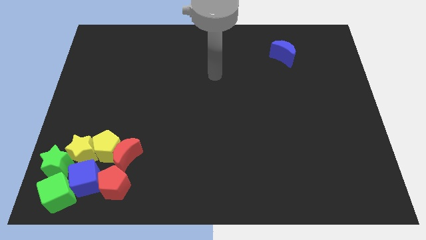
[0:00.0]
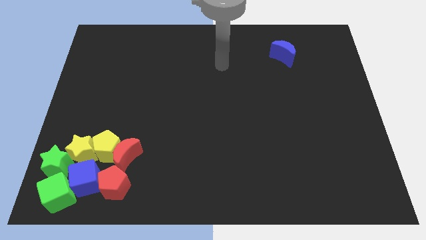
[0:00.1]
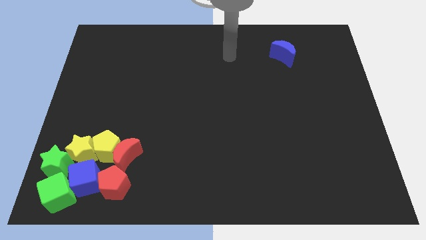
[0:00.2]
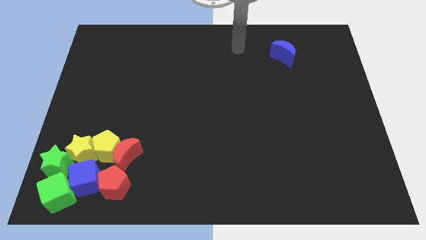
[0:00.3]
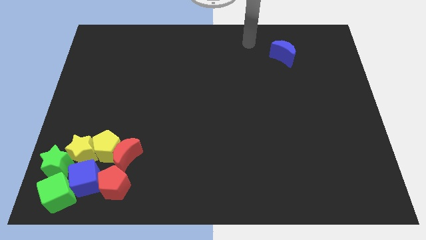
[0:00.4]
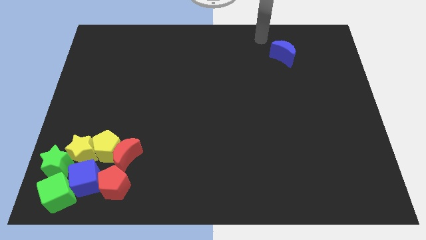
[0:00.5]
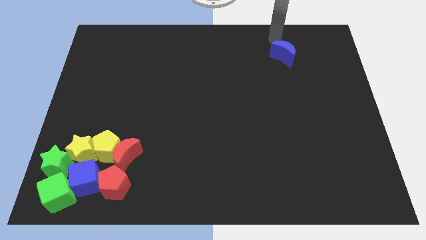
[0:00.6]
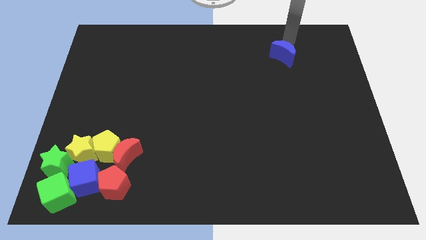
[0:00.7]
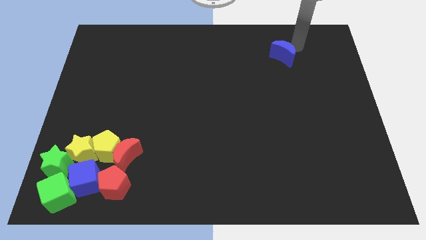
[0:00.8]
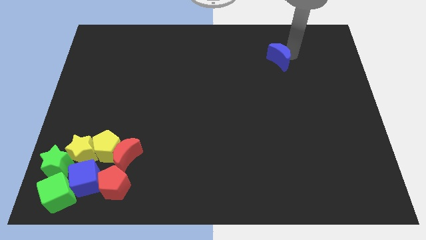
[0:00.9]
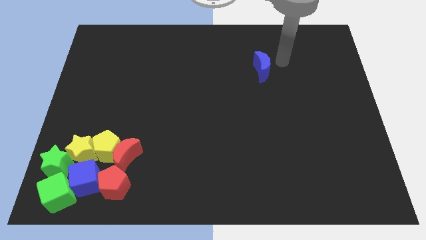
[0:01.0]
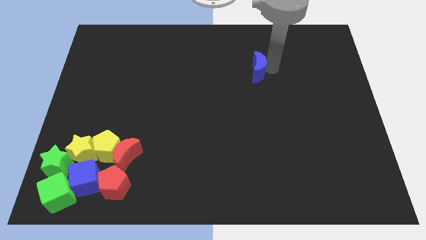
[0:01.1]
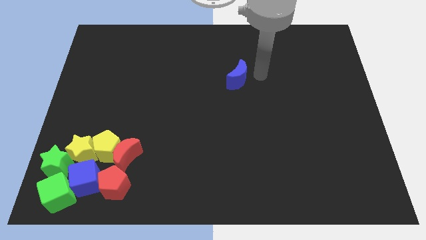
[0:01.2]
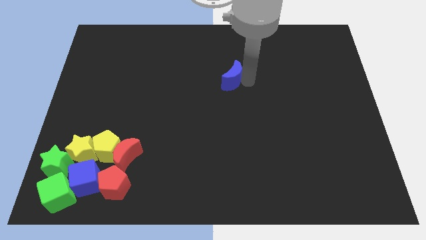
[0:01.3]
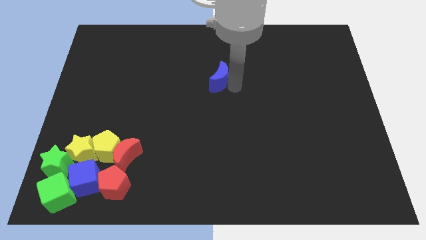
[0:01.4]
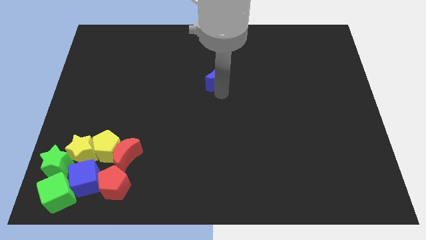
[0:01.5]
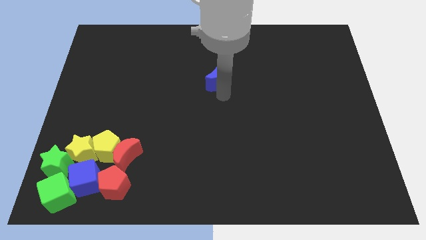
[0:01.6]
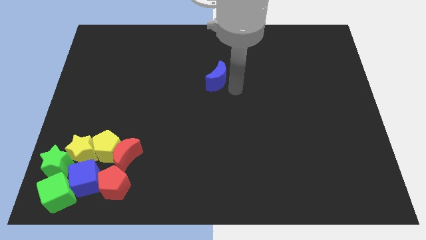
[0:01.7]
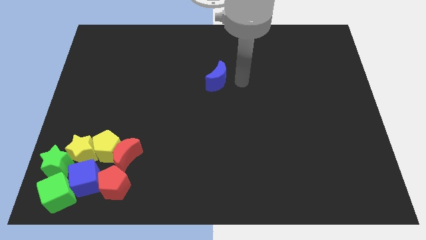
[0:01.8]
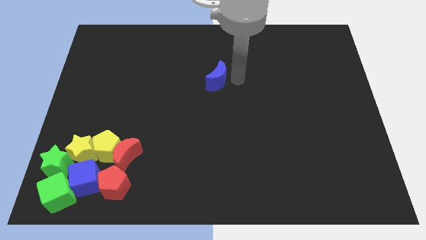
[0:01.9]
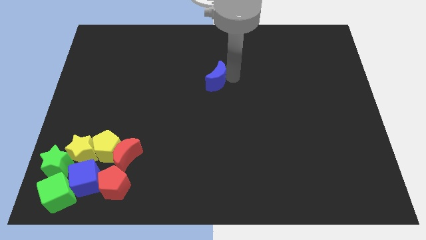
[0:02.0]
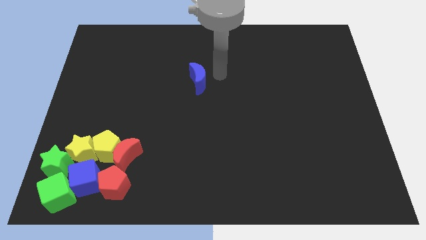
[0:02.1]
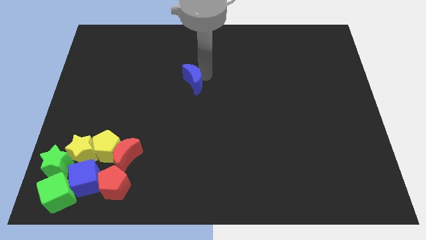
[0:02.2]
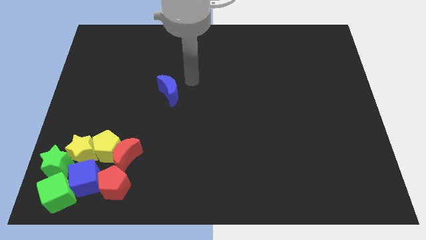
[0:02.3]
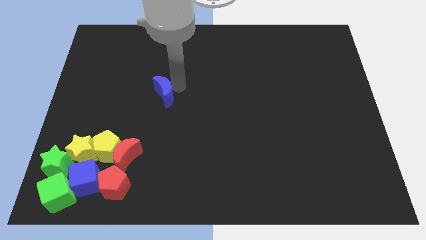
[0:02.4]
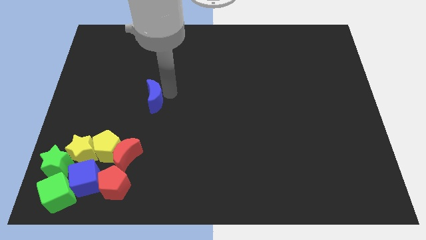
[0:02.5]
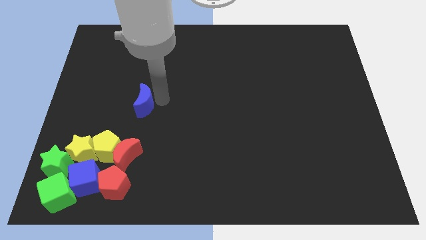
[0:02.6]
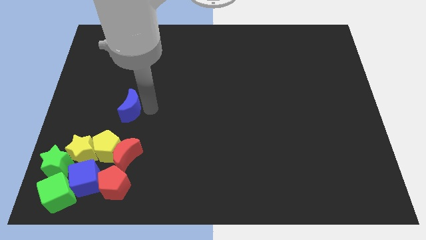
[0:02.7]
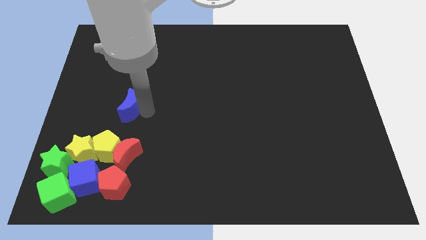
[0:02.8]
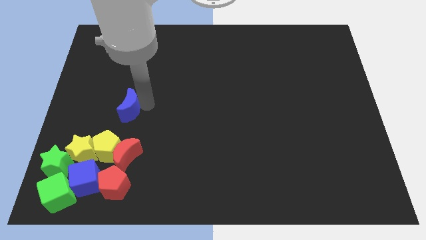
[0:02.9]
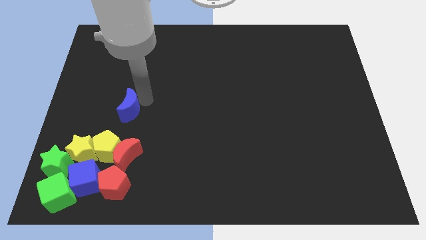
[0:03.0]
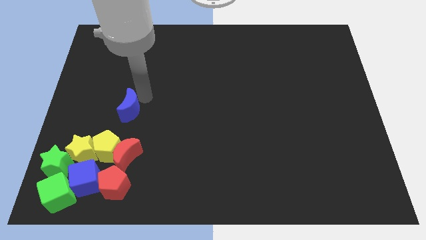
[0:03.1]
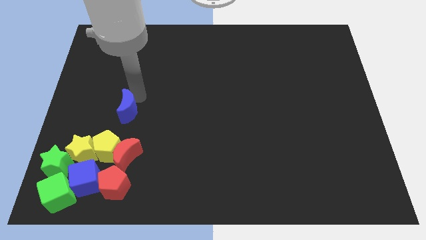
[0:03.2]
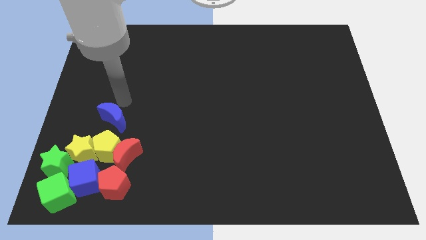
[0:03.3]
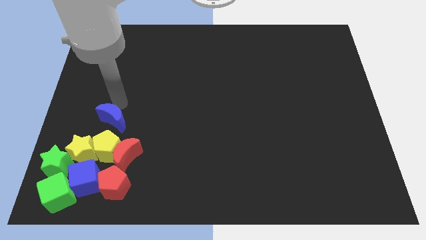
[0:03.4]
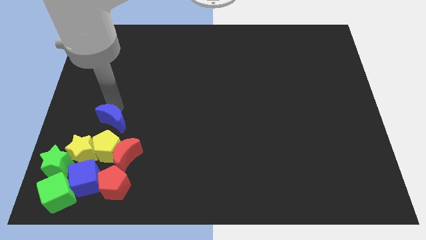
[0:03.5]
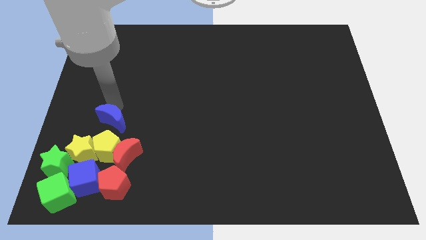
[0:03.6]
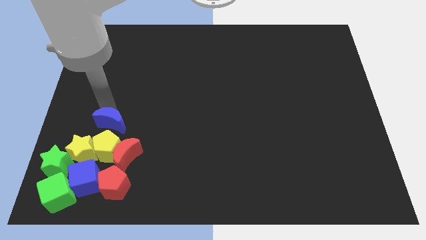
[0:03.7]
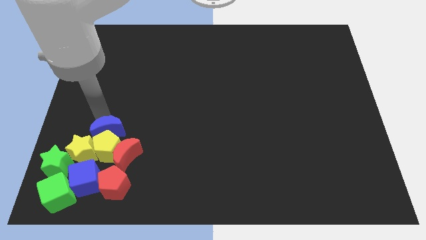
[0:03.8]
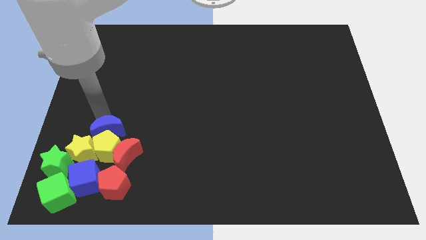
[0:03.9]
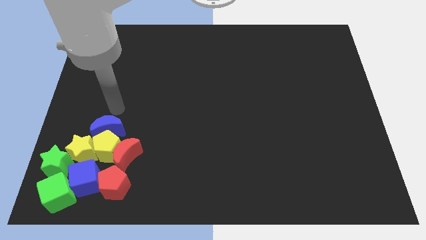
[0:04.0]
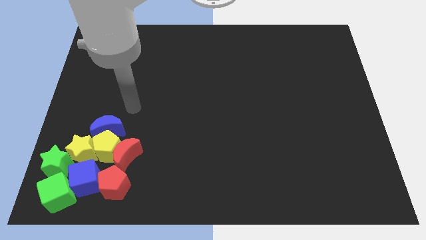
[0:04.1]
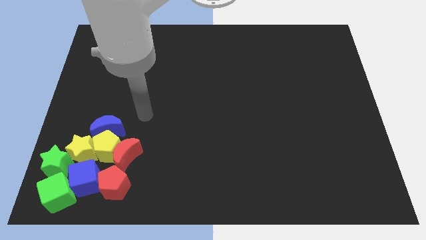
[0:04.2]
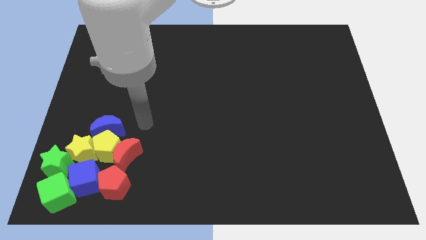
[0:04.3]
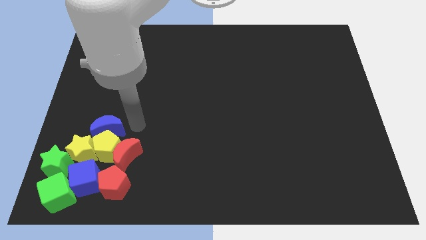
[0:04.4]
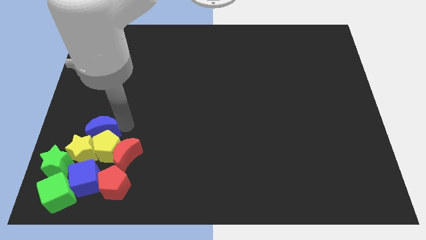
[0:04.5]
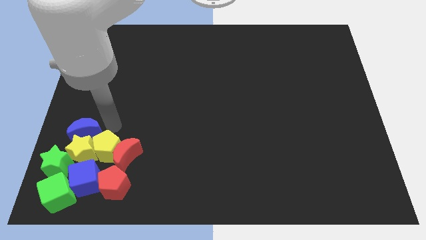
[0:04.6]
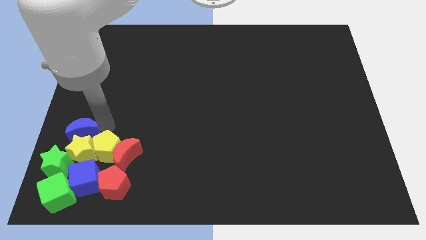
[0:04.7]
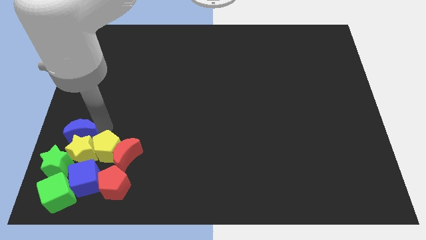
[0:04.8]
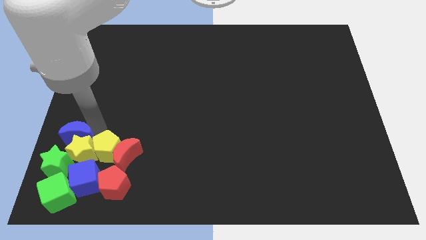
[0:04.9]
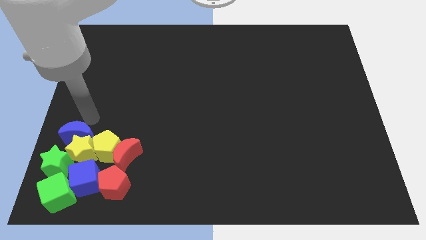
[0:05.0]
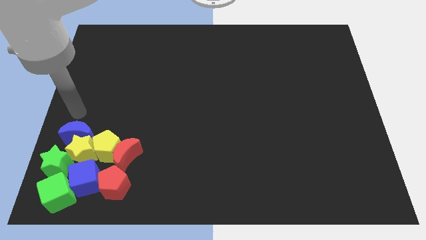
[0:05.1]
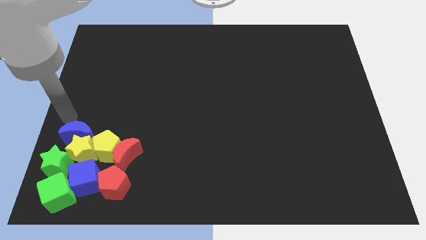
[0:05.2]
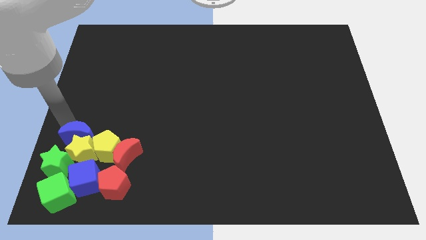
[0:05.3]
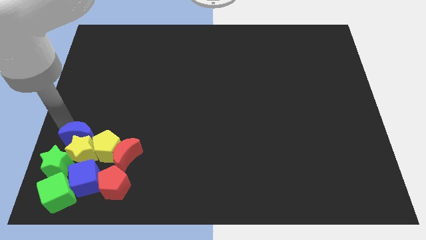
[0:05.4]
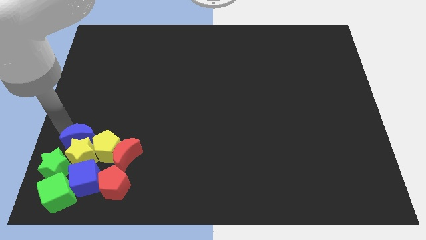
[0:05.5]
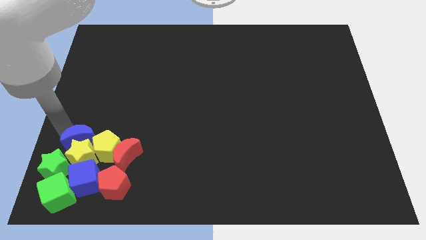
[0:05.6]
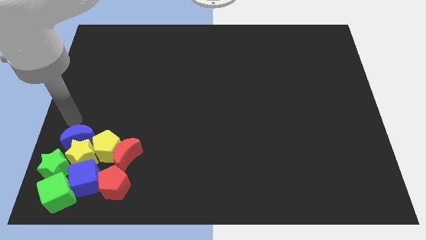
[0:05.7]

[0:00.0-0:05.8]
push the blue crescent into the yellow star

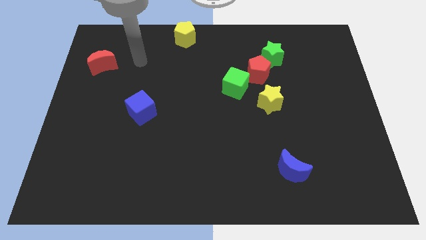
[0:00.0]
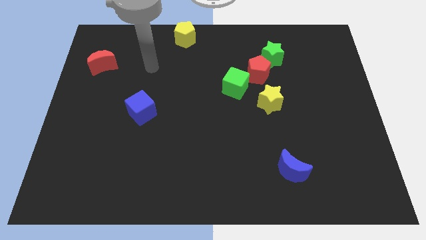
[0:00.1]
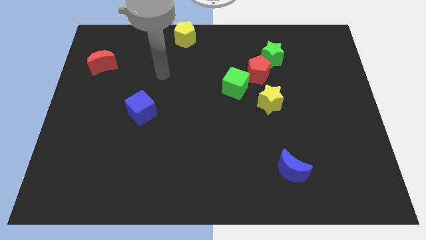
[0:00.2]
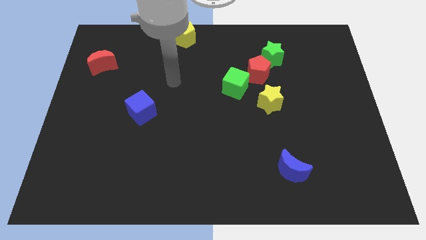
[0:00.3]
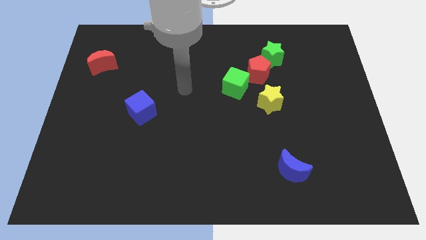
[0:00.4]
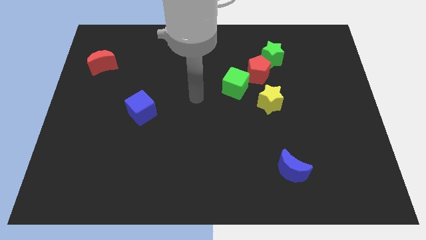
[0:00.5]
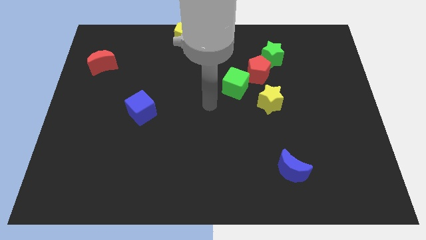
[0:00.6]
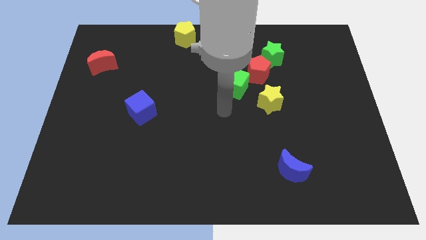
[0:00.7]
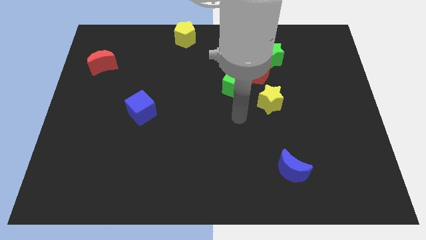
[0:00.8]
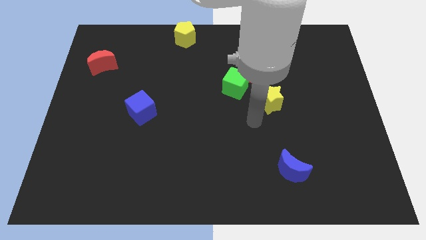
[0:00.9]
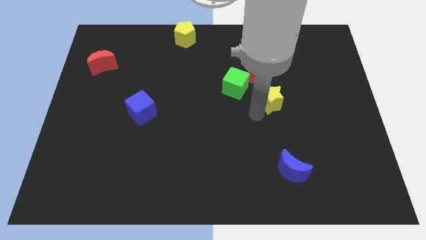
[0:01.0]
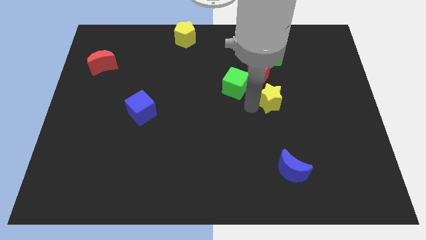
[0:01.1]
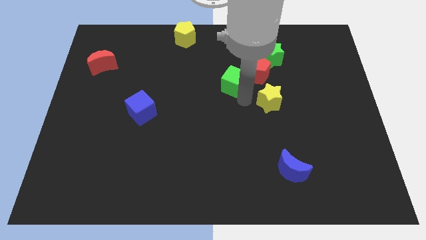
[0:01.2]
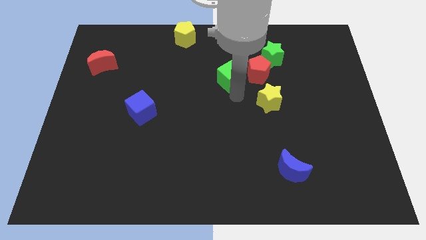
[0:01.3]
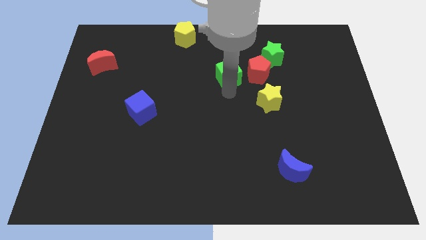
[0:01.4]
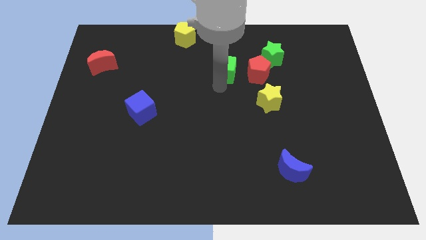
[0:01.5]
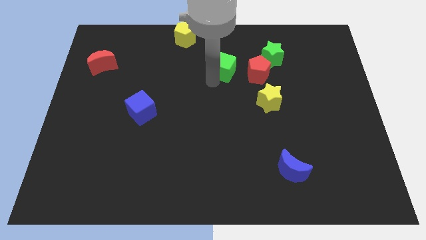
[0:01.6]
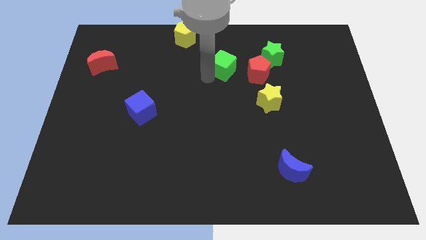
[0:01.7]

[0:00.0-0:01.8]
separate green cube from red pentagon

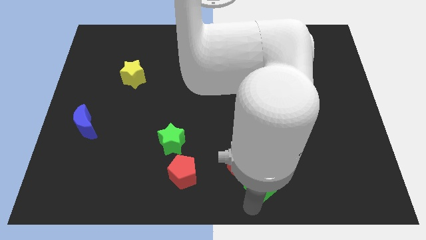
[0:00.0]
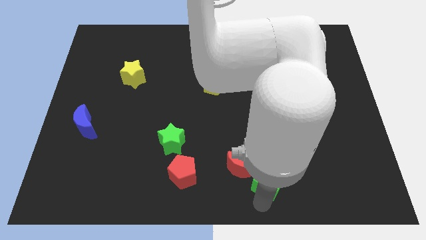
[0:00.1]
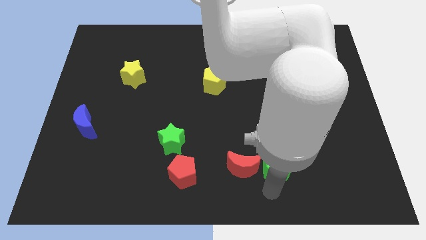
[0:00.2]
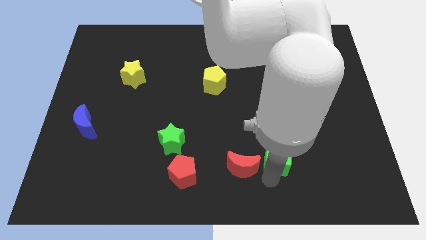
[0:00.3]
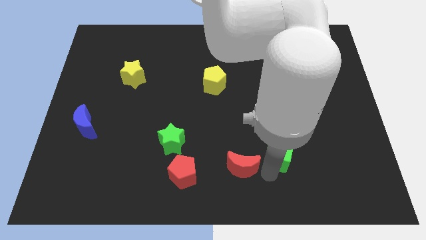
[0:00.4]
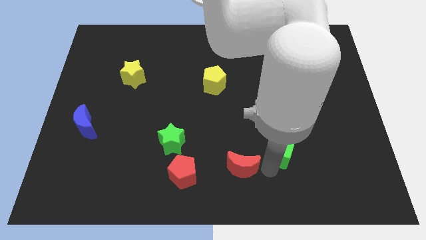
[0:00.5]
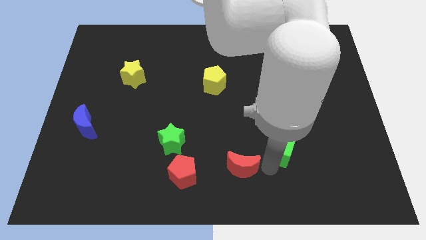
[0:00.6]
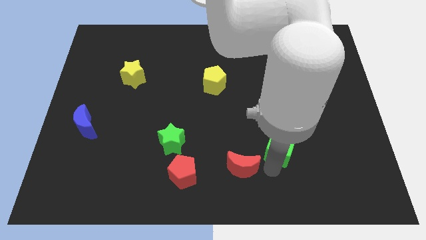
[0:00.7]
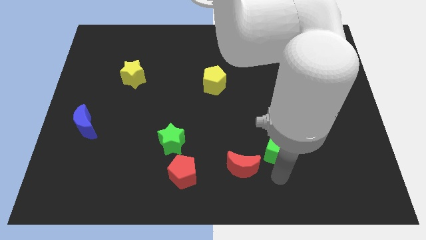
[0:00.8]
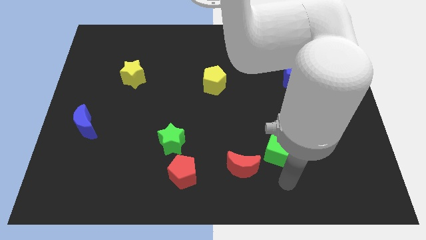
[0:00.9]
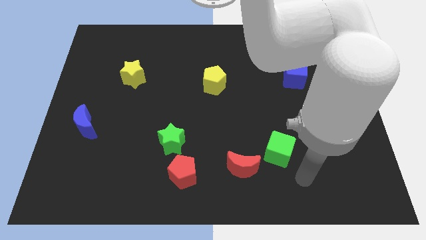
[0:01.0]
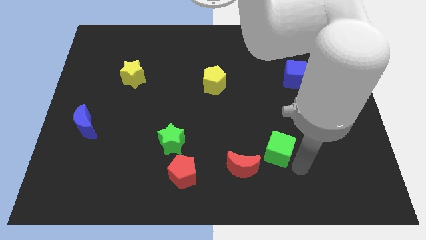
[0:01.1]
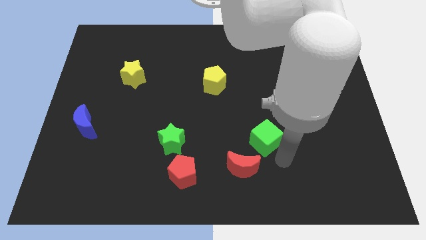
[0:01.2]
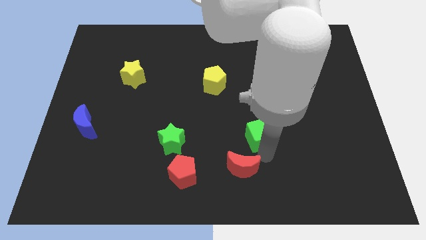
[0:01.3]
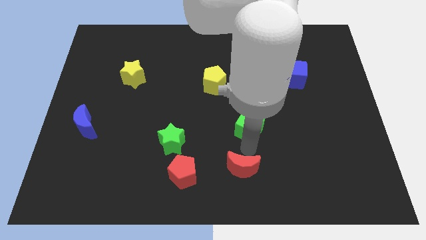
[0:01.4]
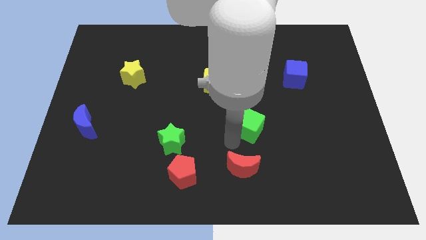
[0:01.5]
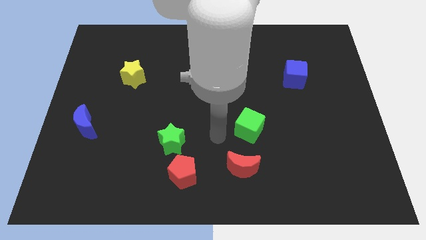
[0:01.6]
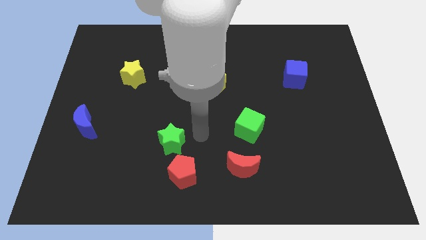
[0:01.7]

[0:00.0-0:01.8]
place the green cube at the top side of the red crescent
